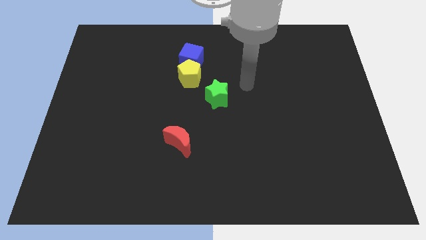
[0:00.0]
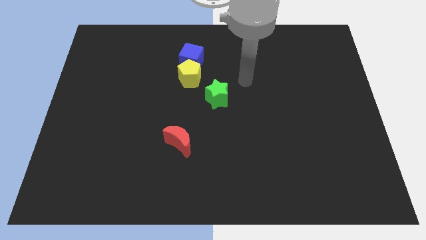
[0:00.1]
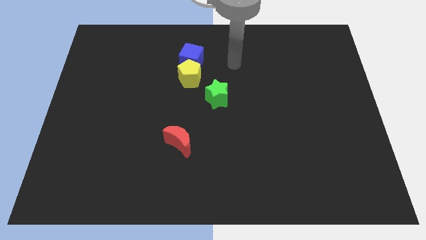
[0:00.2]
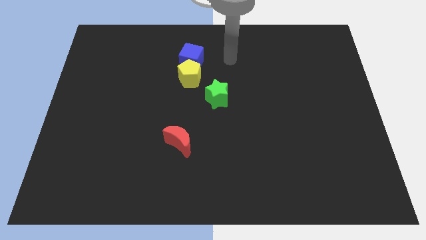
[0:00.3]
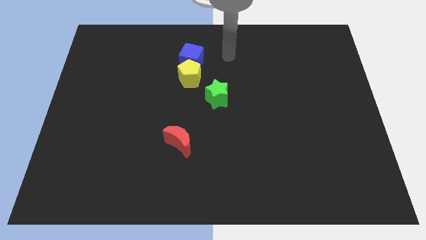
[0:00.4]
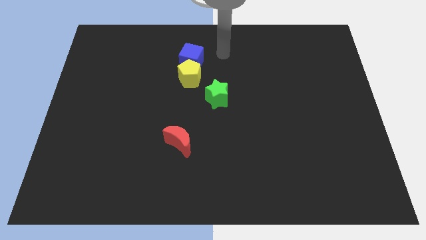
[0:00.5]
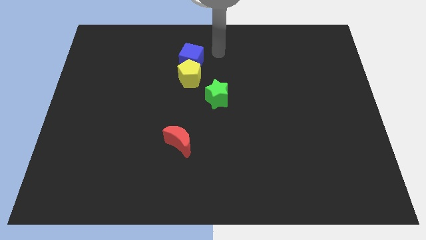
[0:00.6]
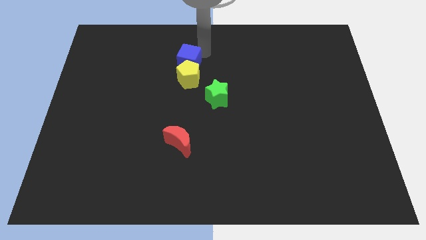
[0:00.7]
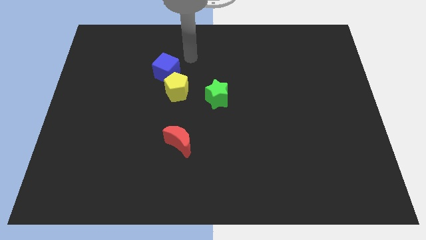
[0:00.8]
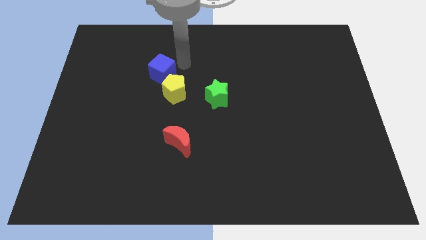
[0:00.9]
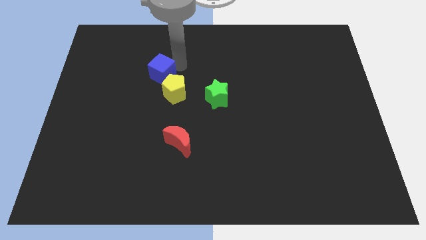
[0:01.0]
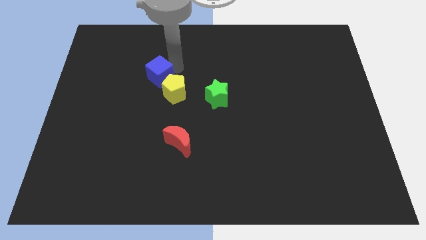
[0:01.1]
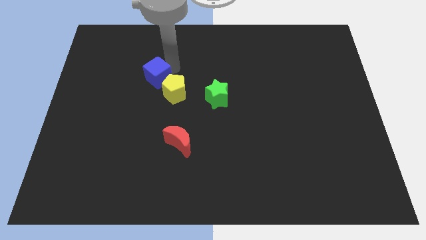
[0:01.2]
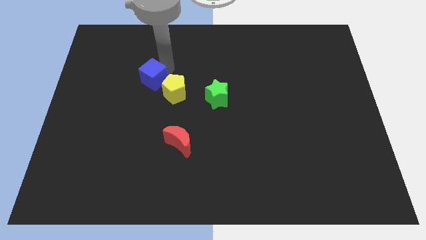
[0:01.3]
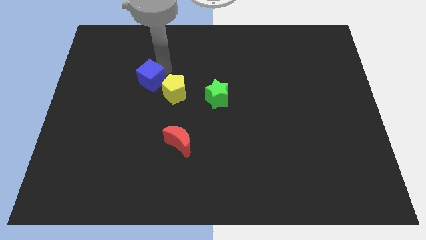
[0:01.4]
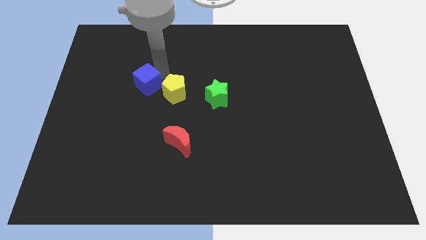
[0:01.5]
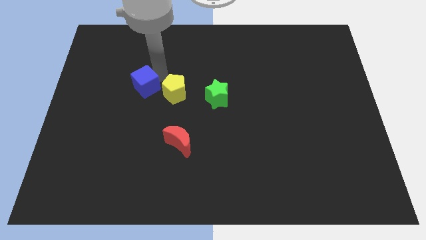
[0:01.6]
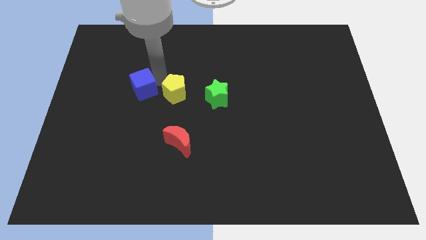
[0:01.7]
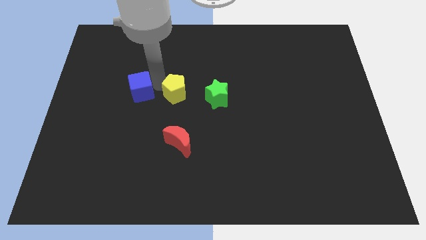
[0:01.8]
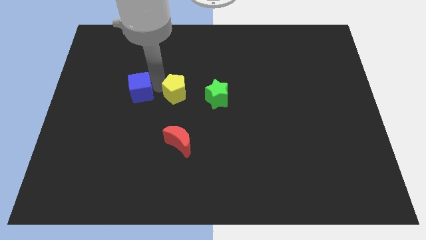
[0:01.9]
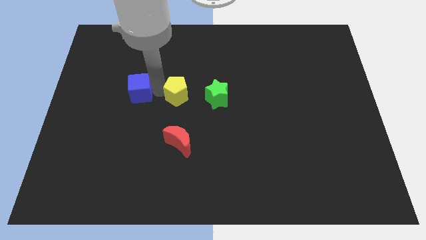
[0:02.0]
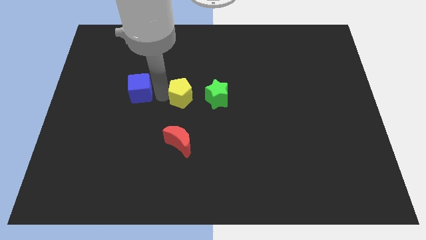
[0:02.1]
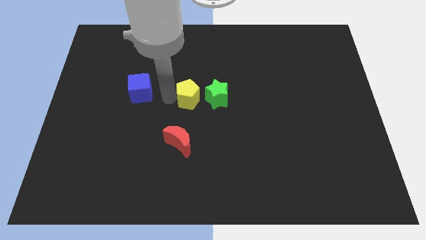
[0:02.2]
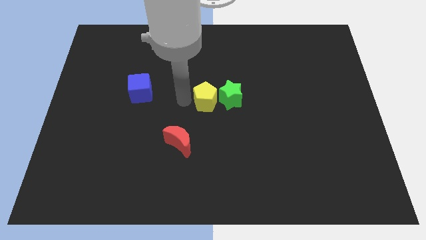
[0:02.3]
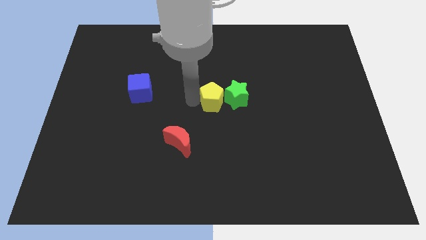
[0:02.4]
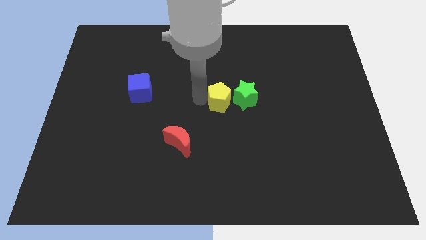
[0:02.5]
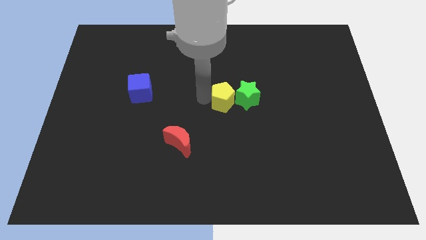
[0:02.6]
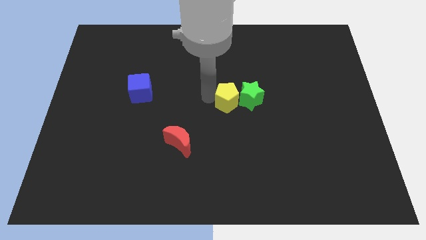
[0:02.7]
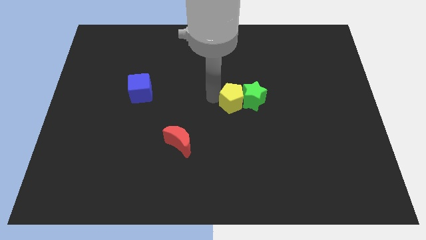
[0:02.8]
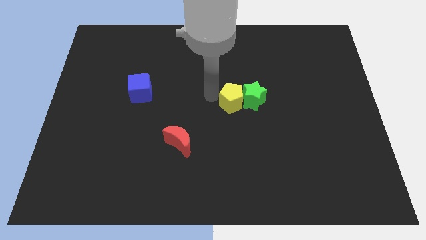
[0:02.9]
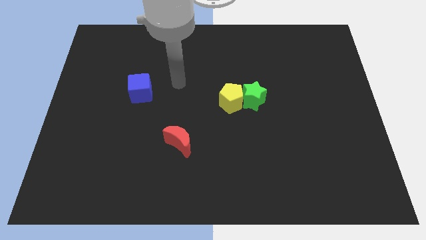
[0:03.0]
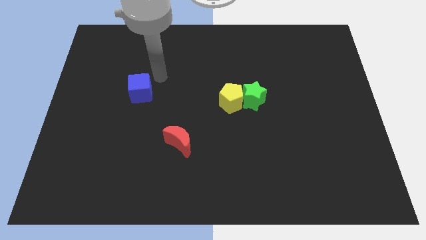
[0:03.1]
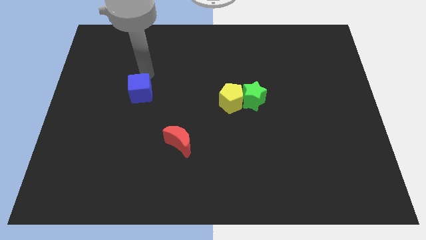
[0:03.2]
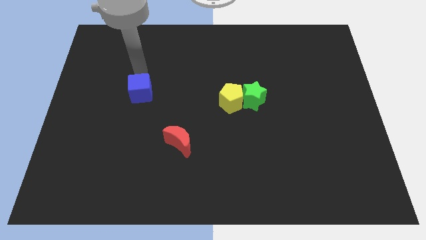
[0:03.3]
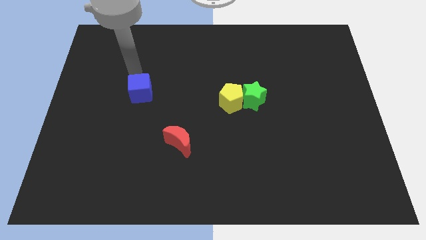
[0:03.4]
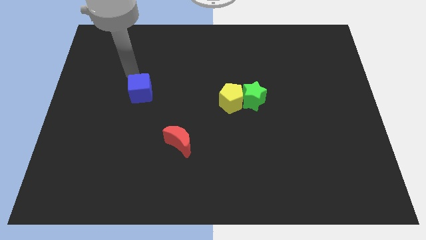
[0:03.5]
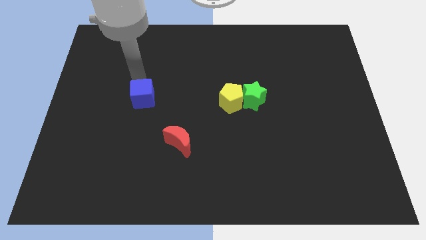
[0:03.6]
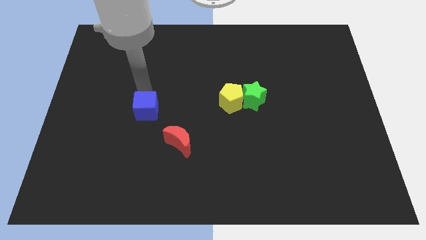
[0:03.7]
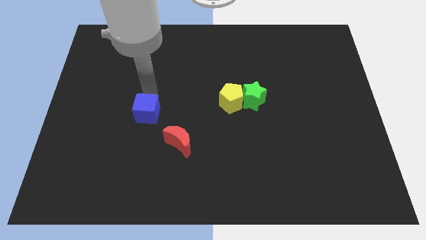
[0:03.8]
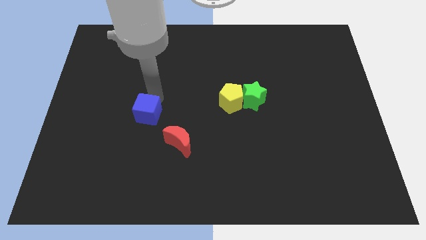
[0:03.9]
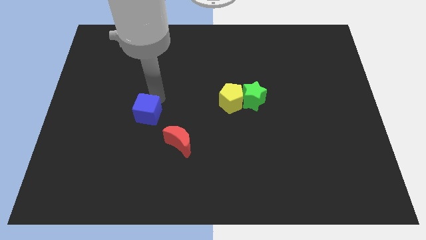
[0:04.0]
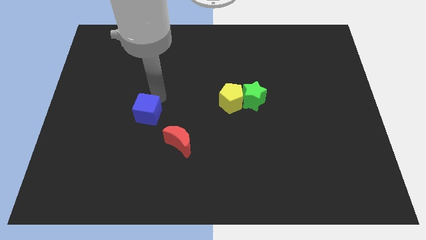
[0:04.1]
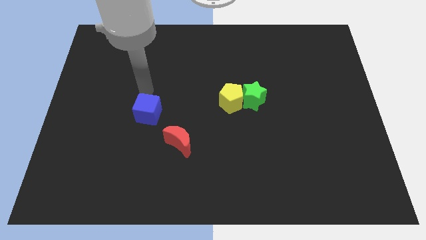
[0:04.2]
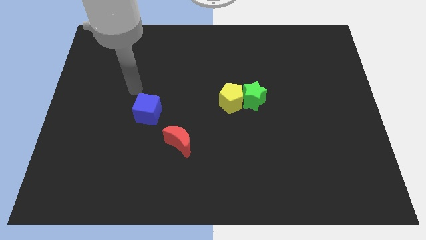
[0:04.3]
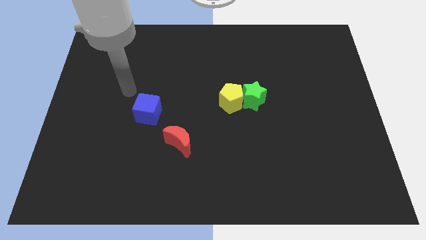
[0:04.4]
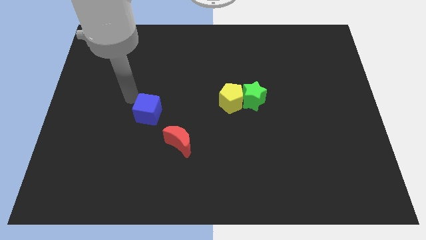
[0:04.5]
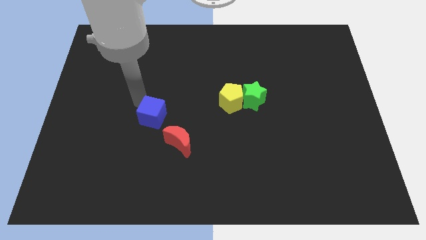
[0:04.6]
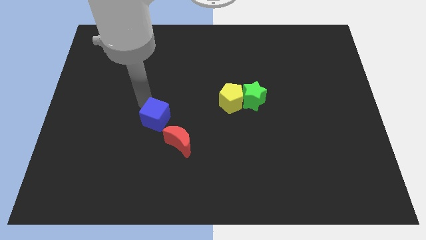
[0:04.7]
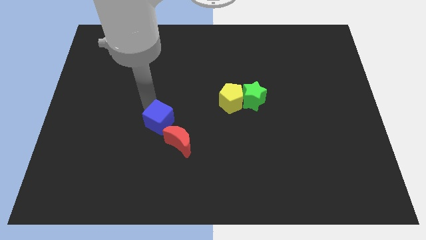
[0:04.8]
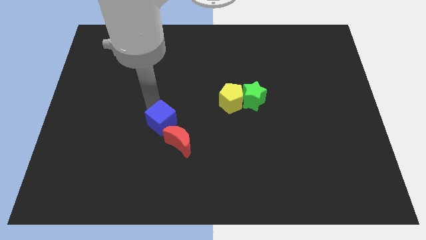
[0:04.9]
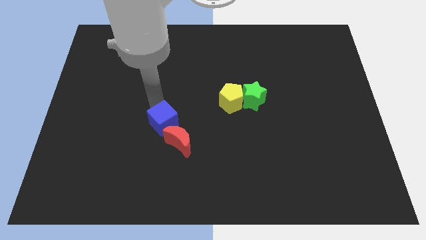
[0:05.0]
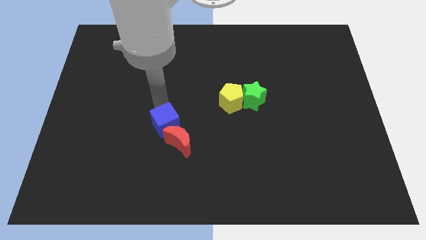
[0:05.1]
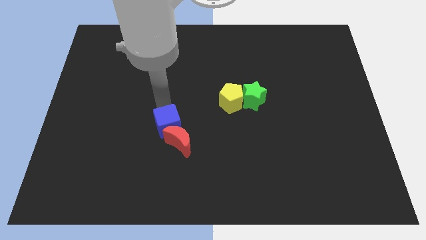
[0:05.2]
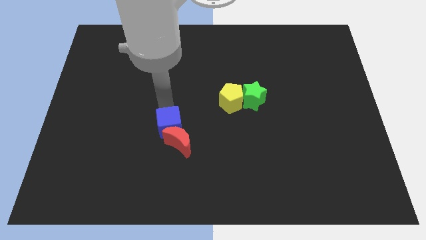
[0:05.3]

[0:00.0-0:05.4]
push the blue cube to the red moon

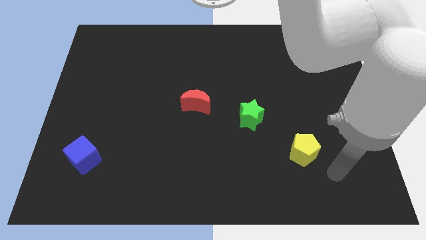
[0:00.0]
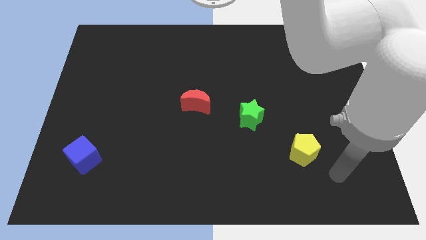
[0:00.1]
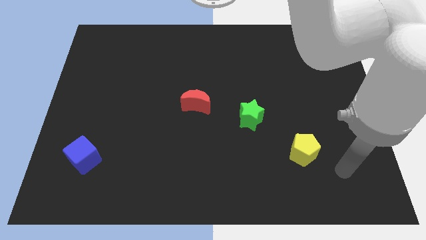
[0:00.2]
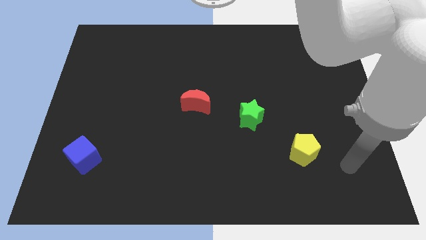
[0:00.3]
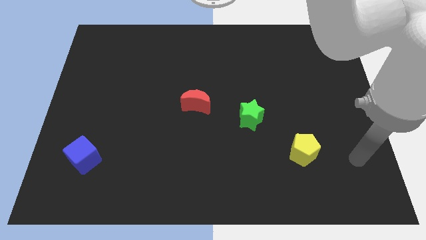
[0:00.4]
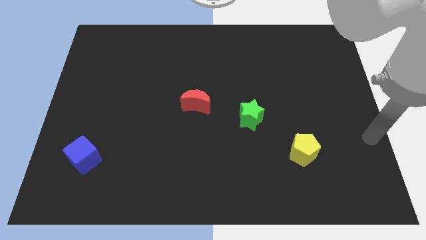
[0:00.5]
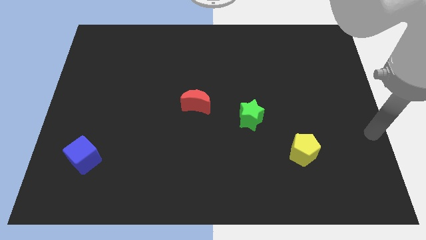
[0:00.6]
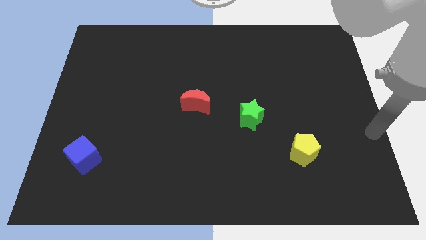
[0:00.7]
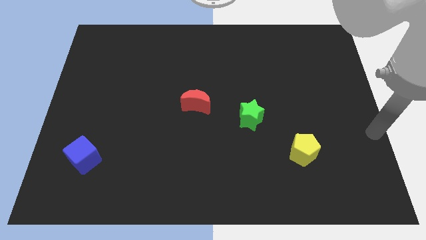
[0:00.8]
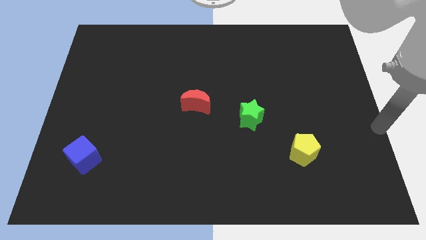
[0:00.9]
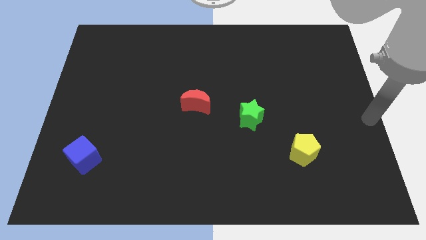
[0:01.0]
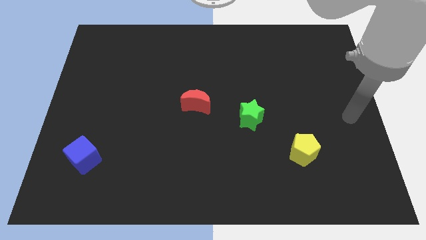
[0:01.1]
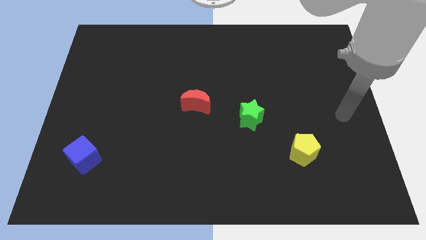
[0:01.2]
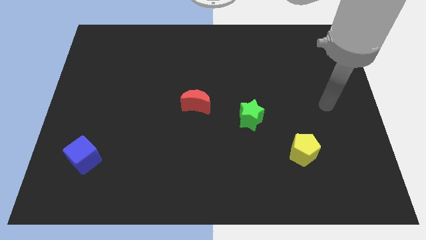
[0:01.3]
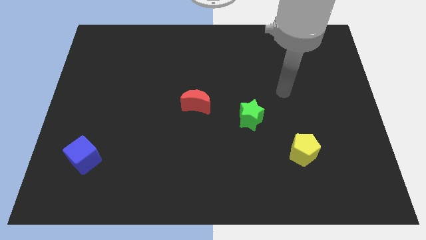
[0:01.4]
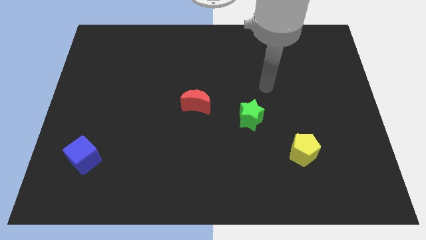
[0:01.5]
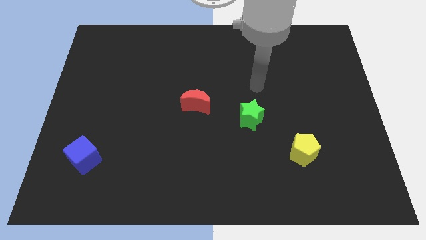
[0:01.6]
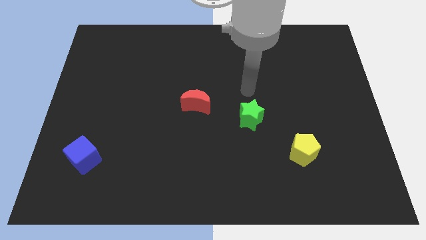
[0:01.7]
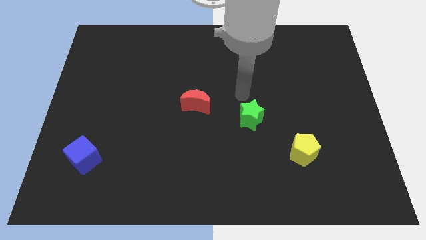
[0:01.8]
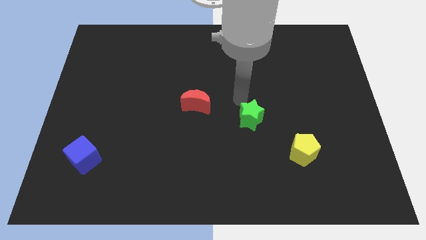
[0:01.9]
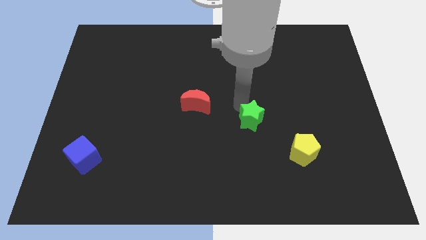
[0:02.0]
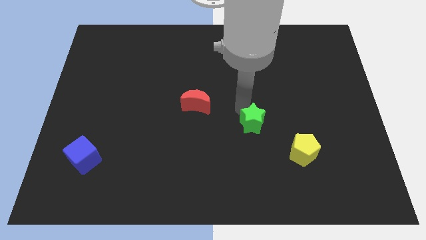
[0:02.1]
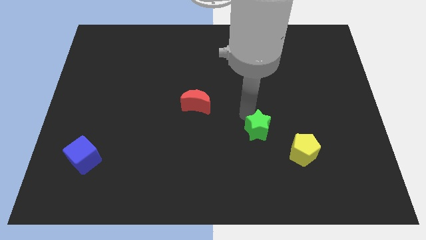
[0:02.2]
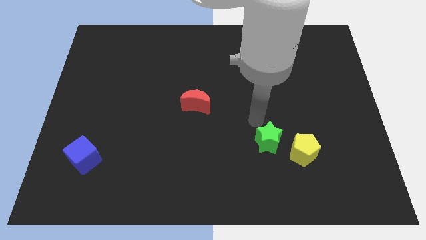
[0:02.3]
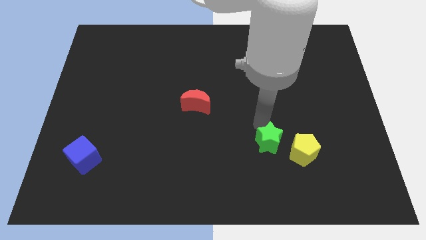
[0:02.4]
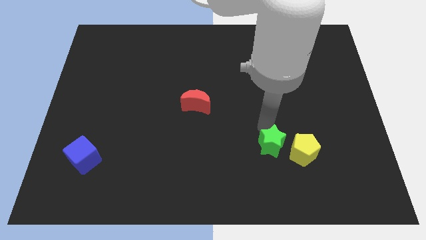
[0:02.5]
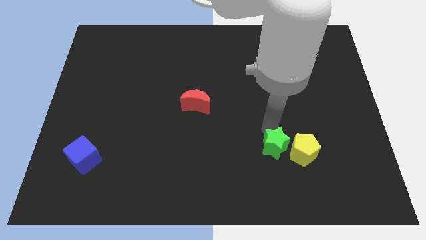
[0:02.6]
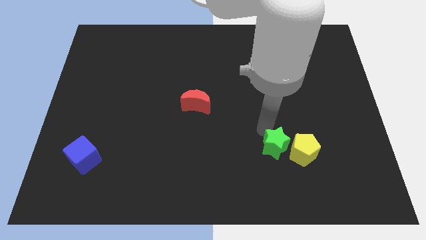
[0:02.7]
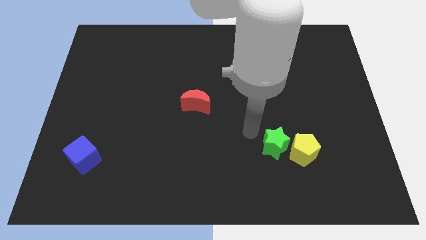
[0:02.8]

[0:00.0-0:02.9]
push the green block close to the yellow block

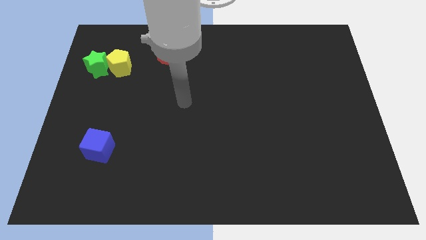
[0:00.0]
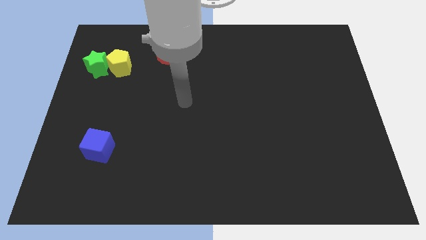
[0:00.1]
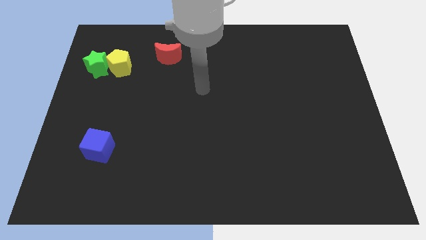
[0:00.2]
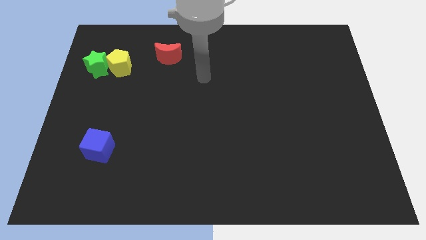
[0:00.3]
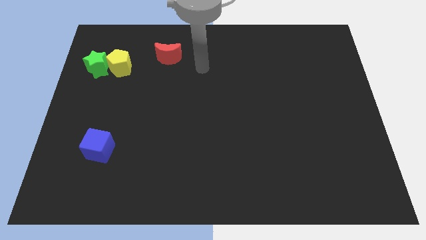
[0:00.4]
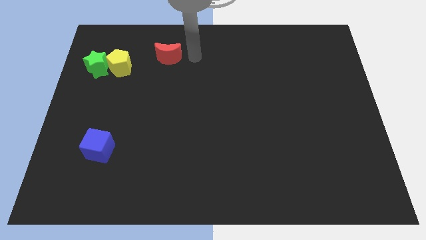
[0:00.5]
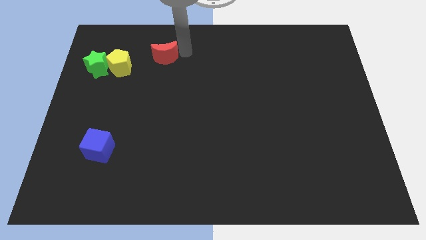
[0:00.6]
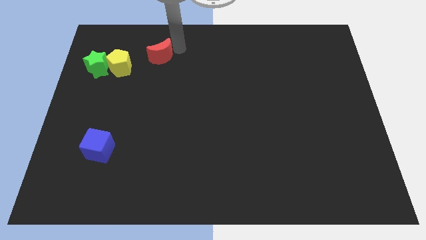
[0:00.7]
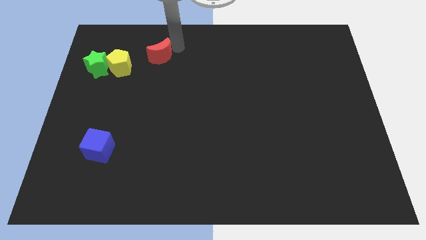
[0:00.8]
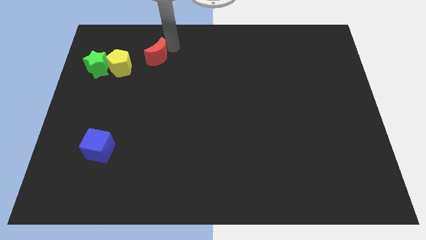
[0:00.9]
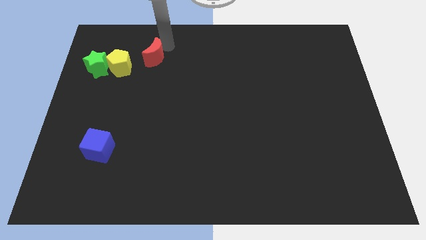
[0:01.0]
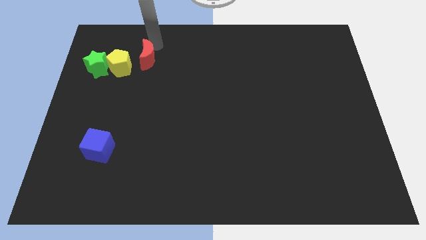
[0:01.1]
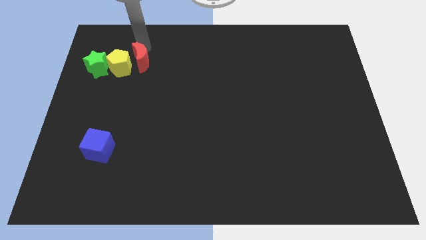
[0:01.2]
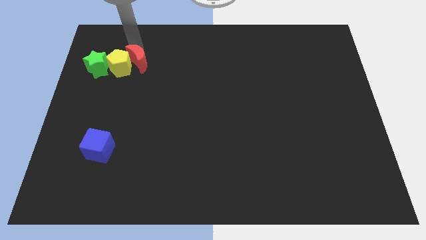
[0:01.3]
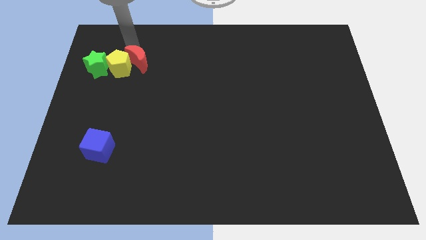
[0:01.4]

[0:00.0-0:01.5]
move the red block to the yellow pentagon
